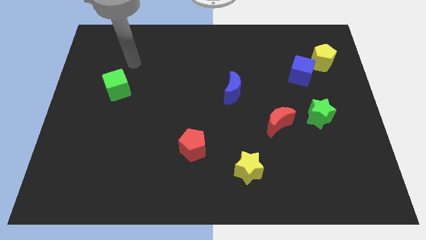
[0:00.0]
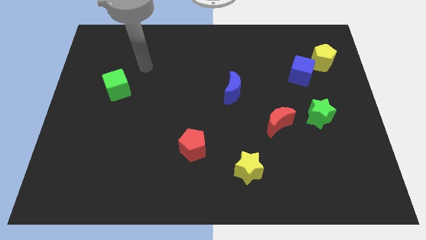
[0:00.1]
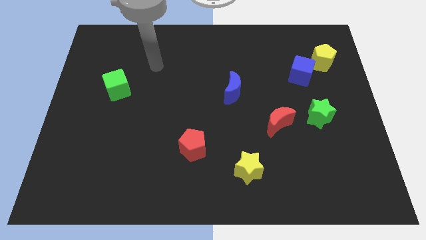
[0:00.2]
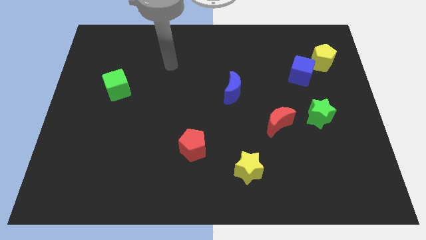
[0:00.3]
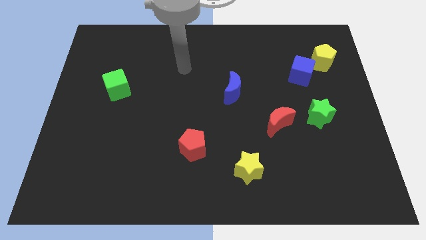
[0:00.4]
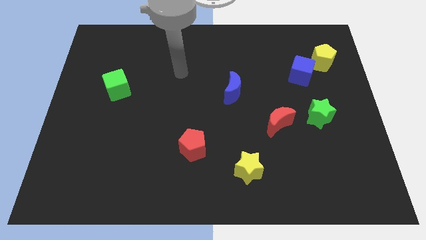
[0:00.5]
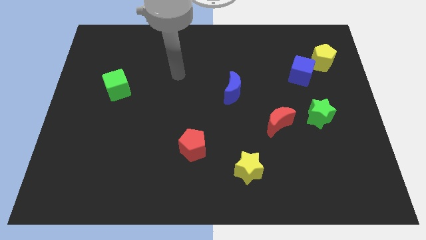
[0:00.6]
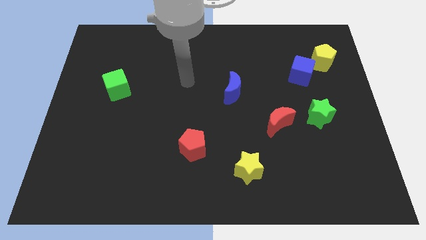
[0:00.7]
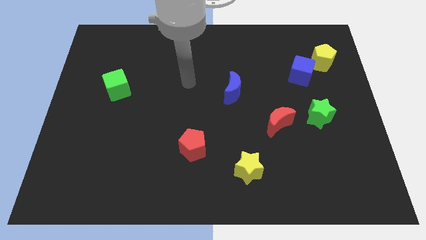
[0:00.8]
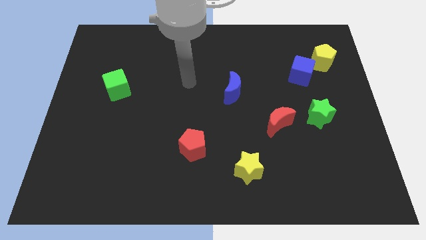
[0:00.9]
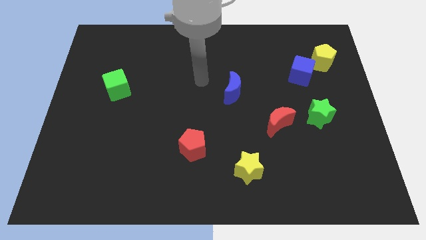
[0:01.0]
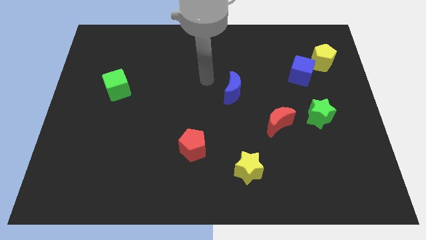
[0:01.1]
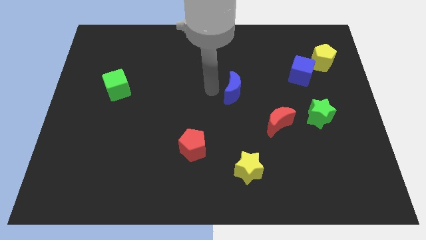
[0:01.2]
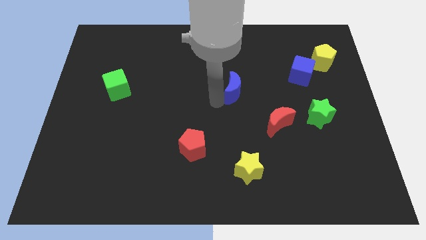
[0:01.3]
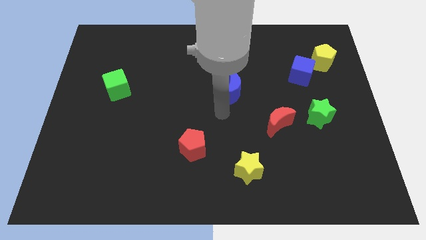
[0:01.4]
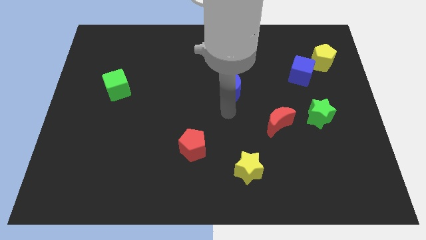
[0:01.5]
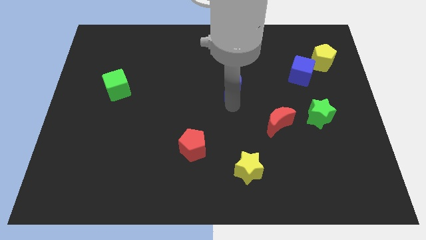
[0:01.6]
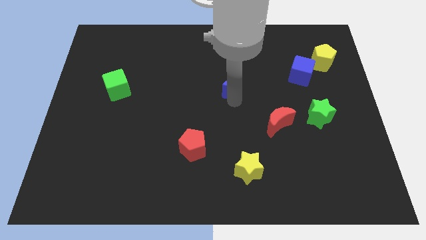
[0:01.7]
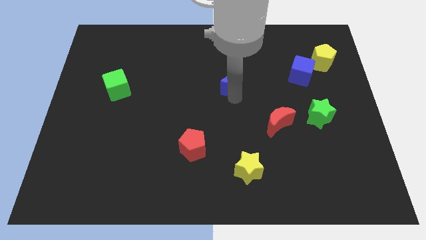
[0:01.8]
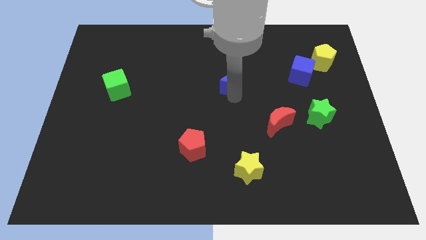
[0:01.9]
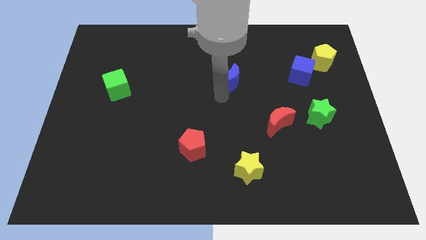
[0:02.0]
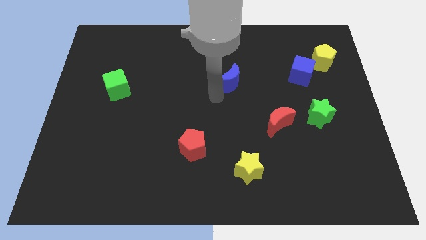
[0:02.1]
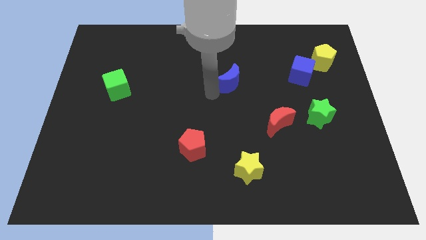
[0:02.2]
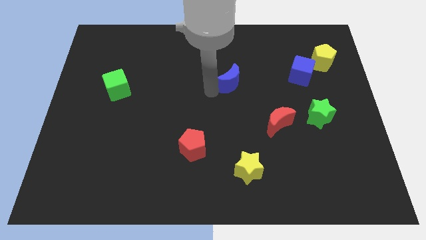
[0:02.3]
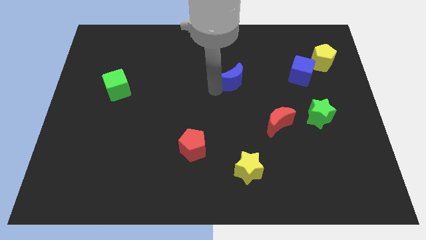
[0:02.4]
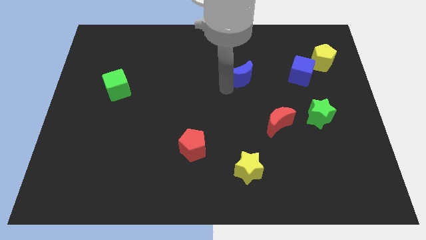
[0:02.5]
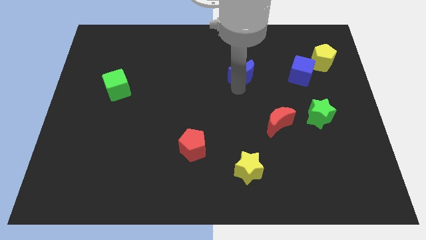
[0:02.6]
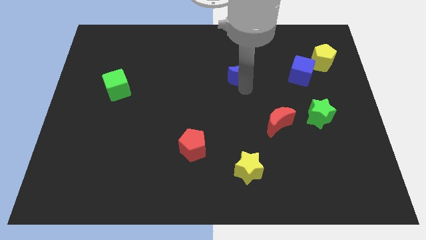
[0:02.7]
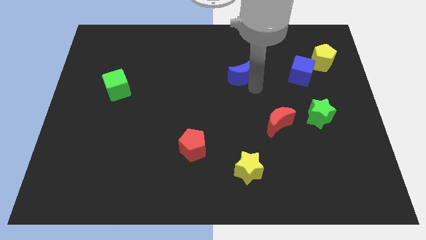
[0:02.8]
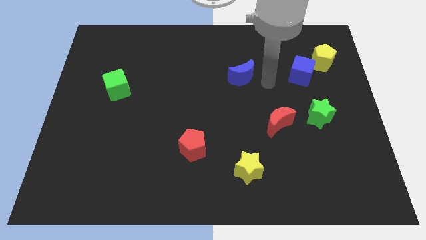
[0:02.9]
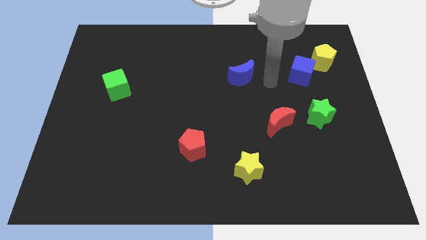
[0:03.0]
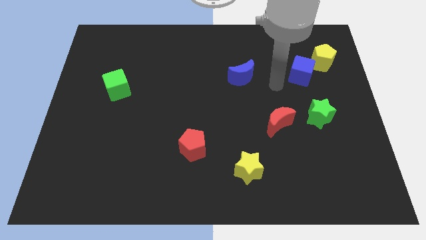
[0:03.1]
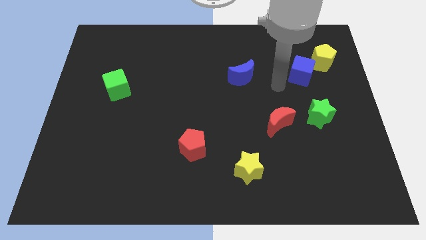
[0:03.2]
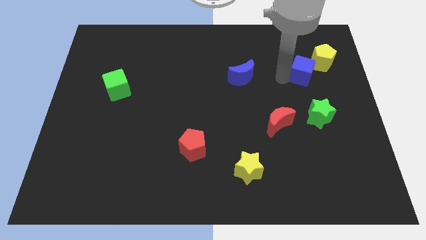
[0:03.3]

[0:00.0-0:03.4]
put the blue moon at the left side of the blue cube

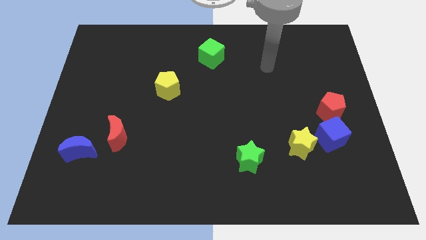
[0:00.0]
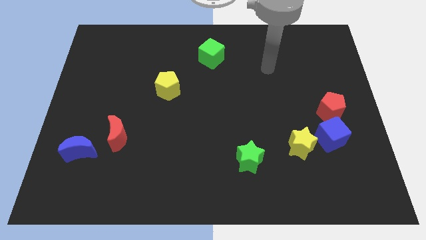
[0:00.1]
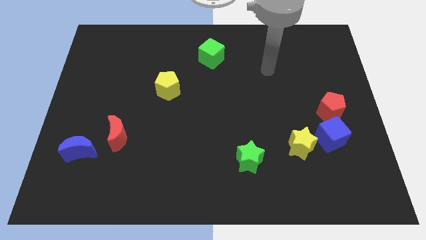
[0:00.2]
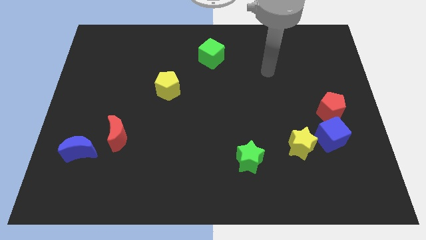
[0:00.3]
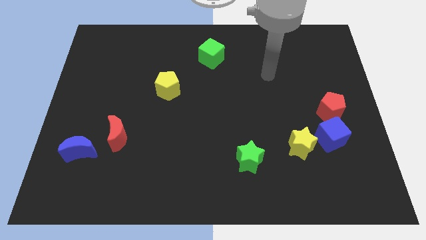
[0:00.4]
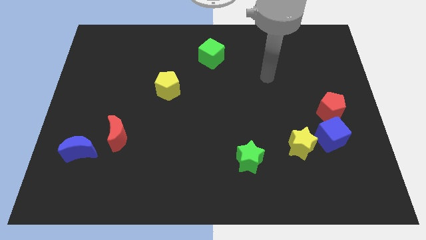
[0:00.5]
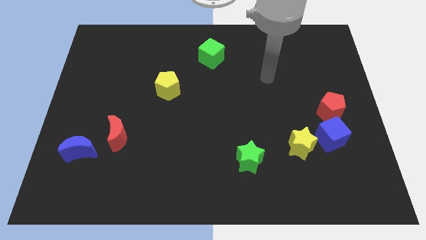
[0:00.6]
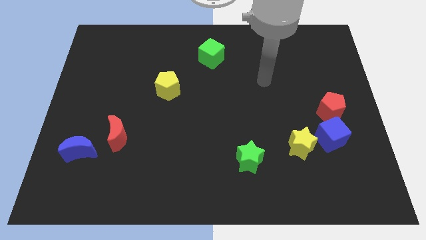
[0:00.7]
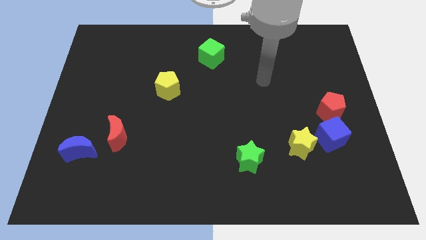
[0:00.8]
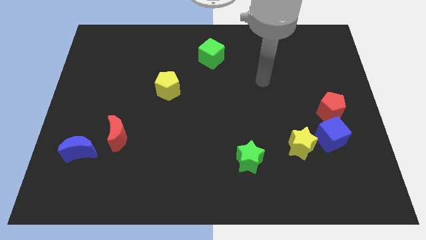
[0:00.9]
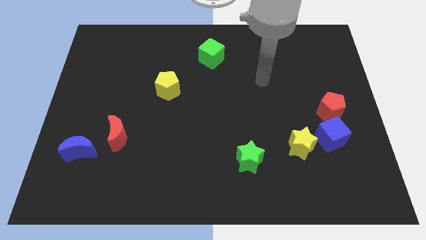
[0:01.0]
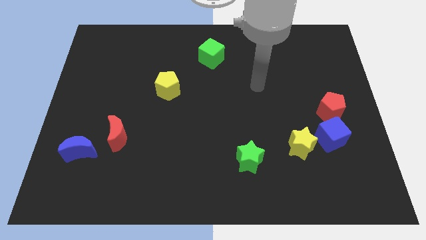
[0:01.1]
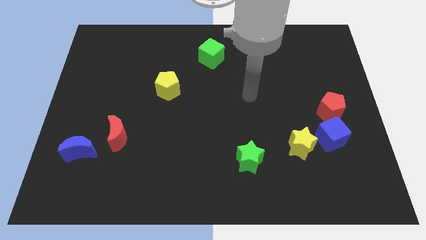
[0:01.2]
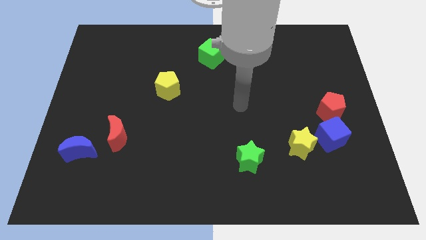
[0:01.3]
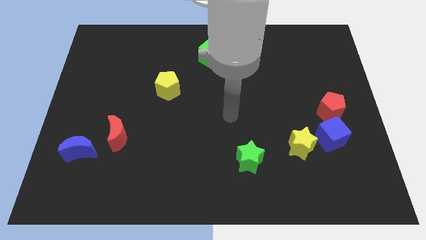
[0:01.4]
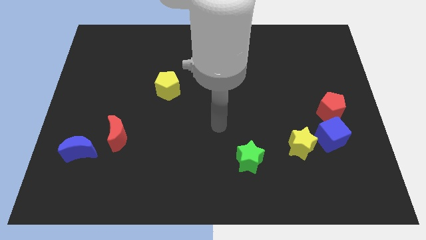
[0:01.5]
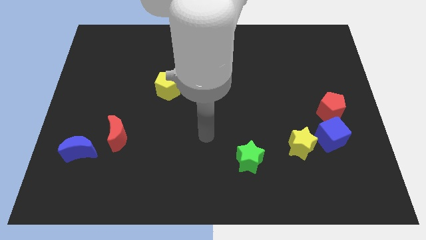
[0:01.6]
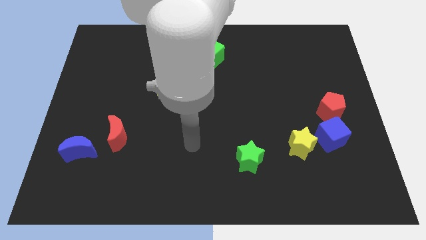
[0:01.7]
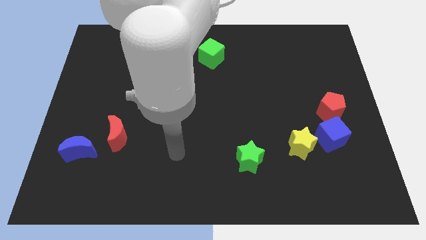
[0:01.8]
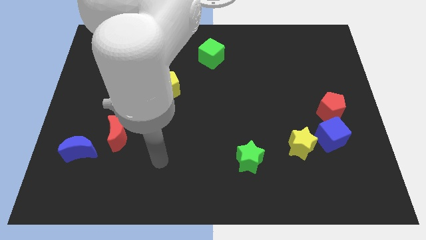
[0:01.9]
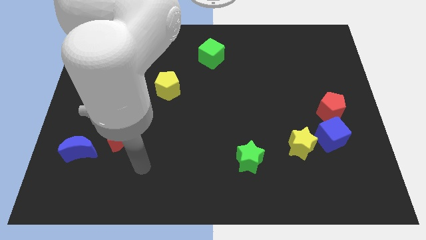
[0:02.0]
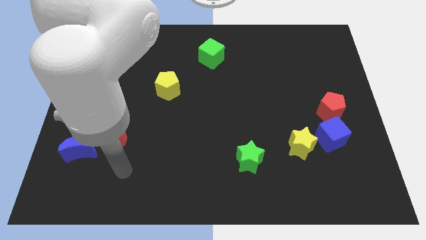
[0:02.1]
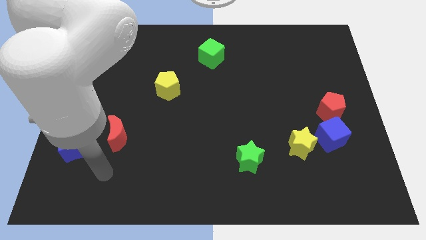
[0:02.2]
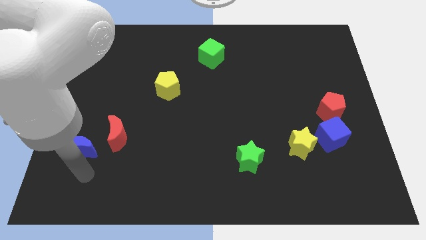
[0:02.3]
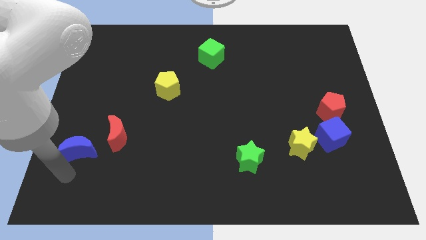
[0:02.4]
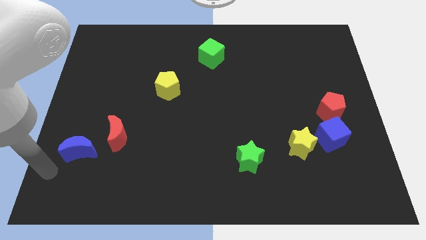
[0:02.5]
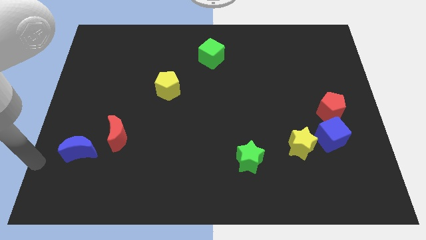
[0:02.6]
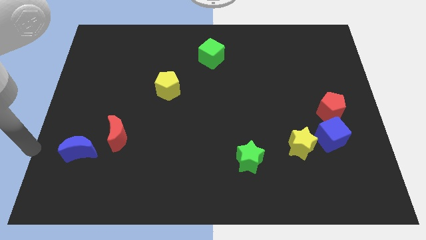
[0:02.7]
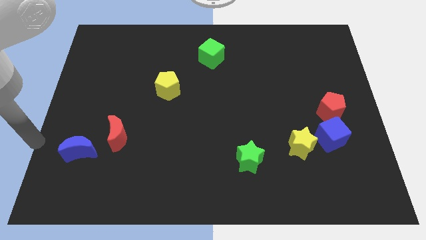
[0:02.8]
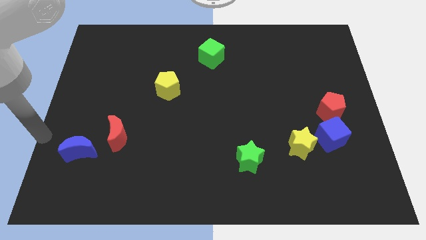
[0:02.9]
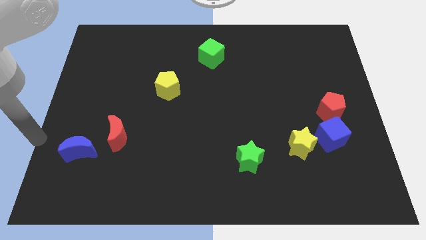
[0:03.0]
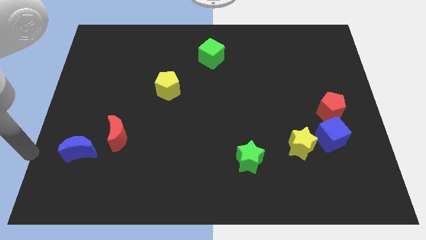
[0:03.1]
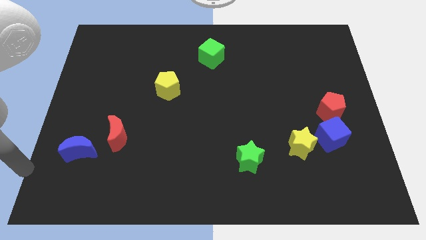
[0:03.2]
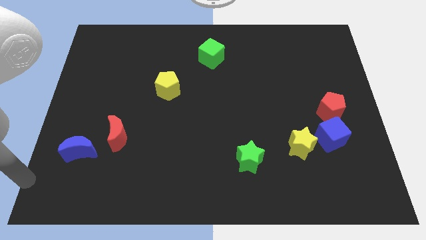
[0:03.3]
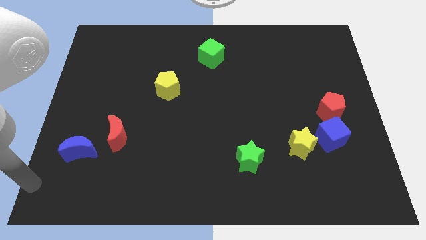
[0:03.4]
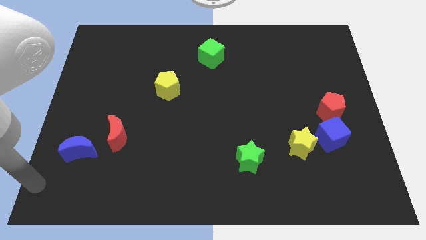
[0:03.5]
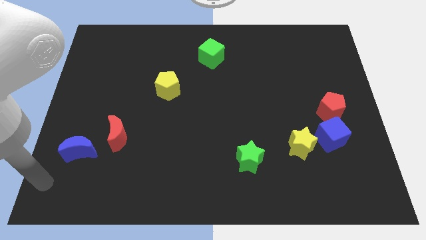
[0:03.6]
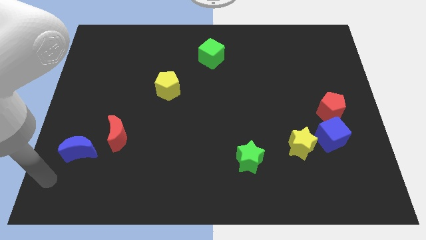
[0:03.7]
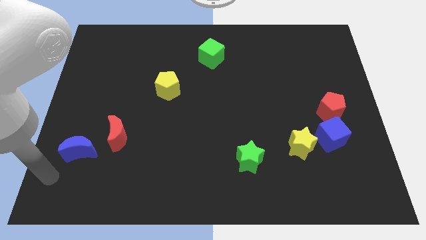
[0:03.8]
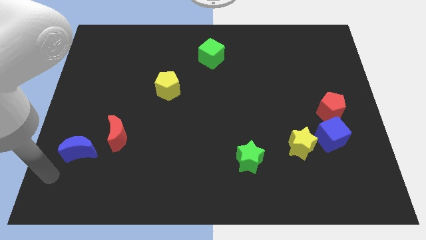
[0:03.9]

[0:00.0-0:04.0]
place the arm under blue crescent

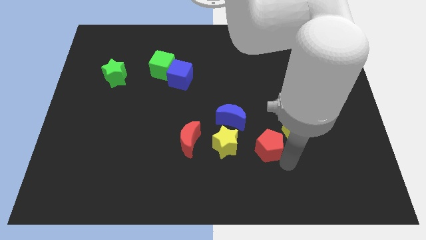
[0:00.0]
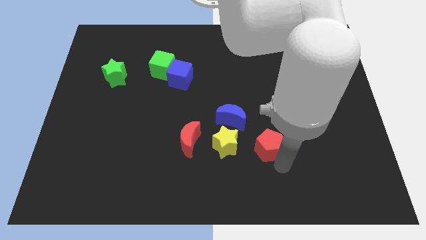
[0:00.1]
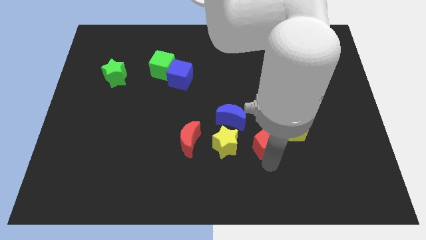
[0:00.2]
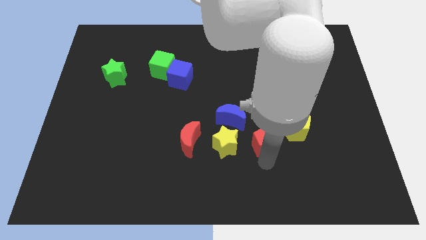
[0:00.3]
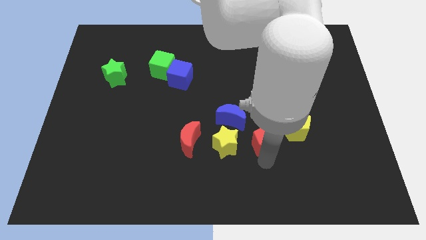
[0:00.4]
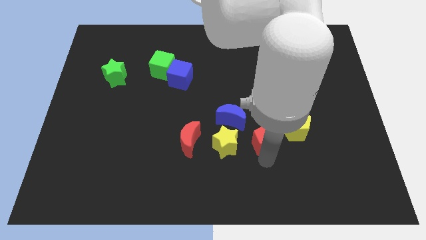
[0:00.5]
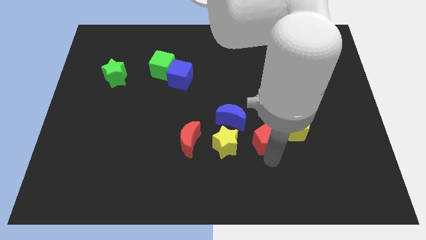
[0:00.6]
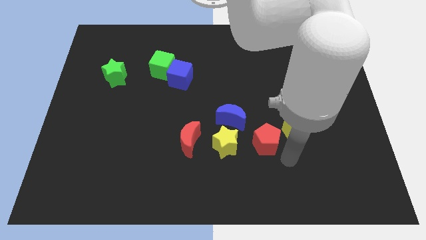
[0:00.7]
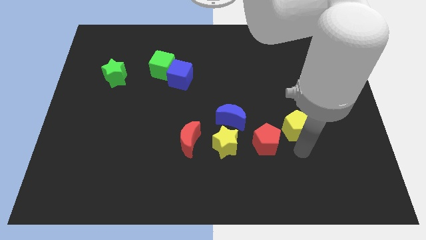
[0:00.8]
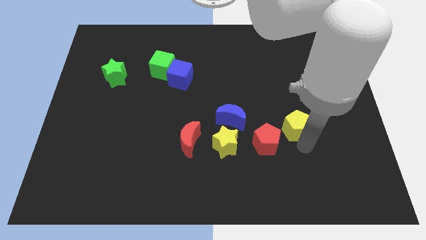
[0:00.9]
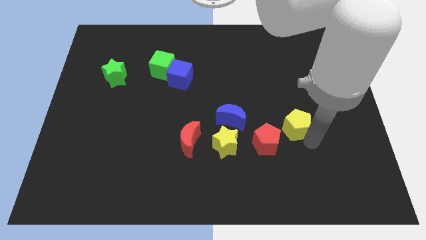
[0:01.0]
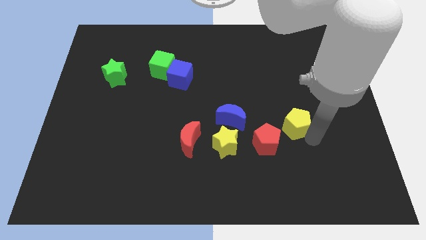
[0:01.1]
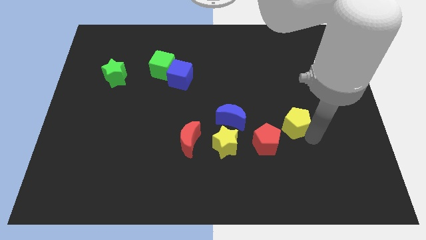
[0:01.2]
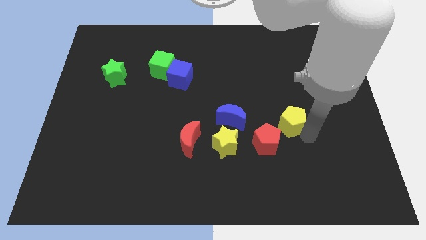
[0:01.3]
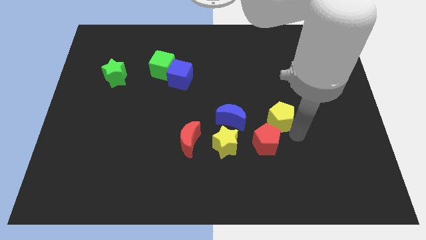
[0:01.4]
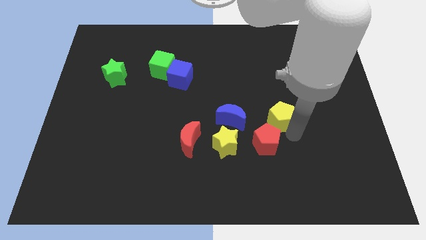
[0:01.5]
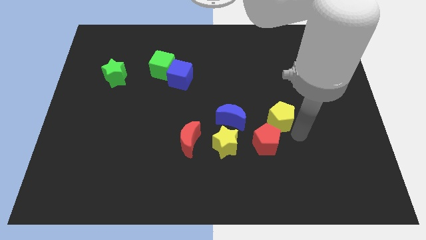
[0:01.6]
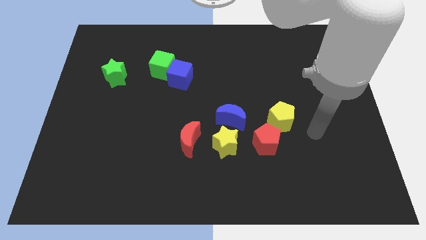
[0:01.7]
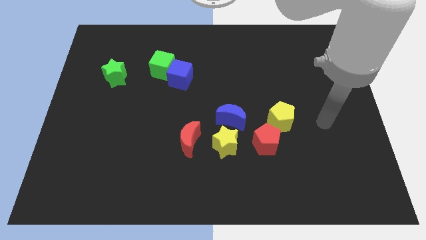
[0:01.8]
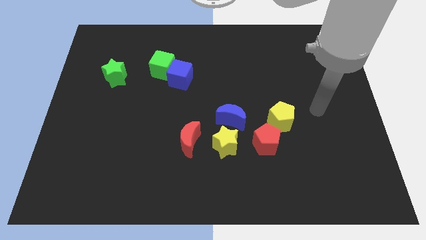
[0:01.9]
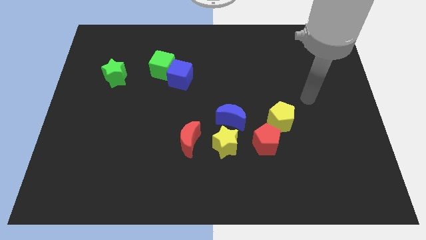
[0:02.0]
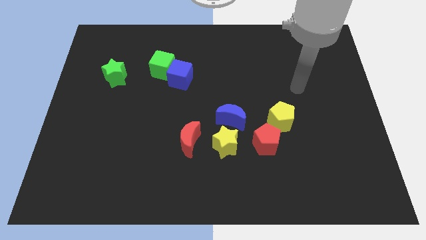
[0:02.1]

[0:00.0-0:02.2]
place yellow pentagon above red pentagon
